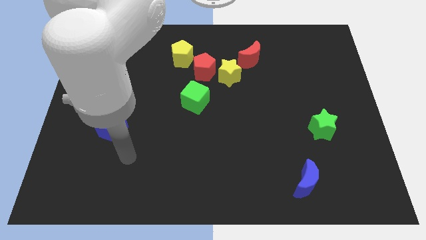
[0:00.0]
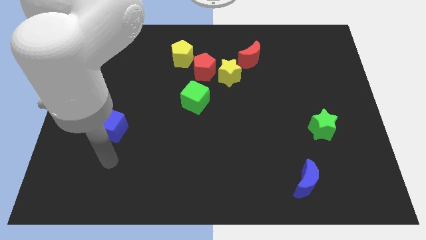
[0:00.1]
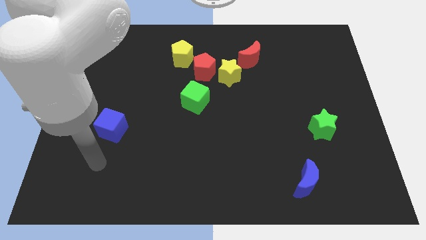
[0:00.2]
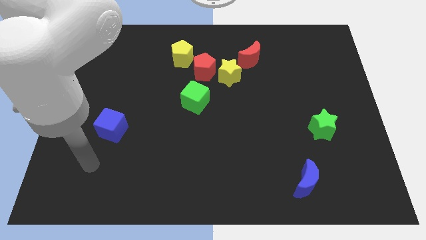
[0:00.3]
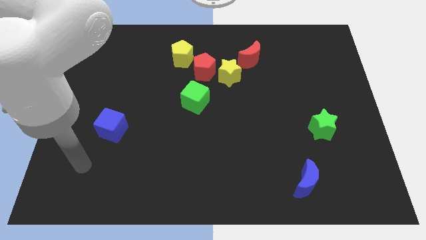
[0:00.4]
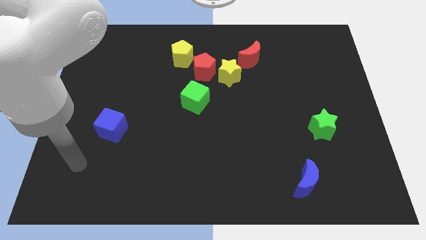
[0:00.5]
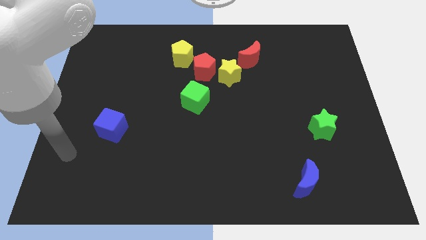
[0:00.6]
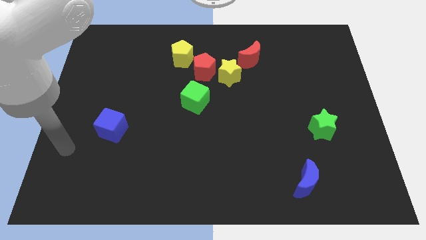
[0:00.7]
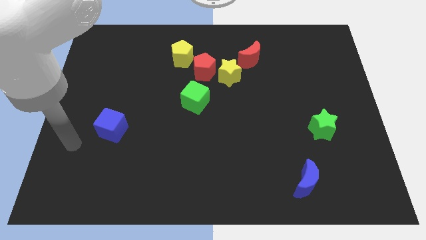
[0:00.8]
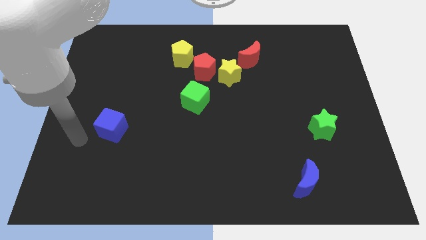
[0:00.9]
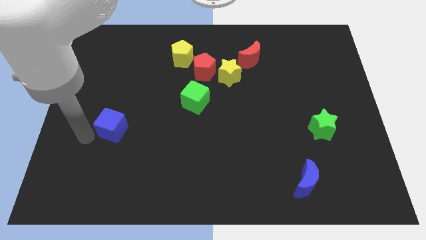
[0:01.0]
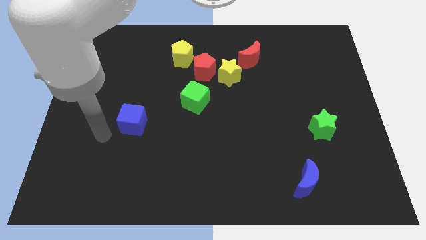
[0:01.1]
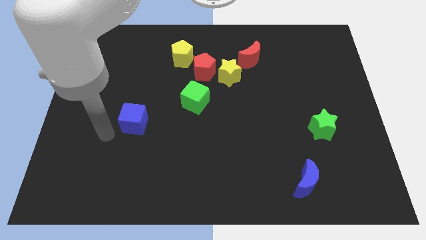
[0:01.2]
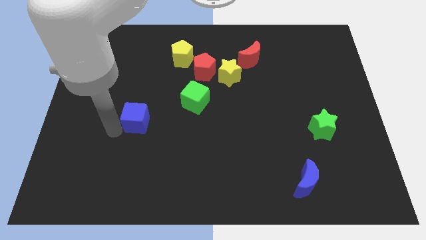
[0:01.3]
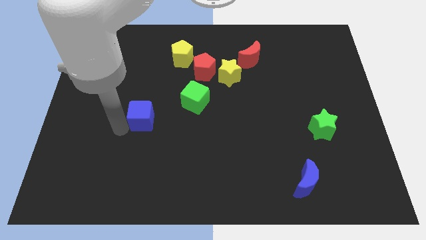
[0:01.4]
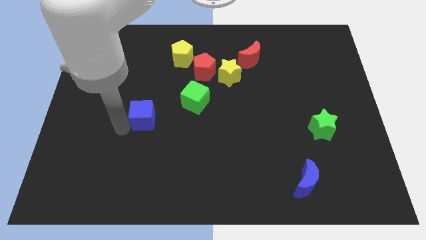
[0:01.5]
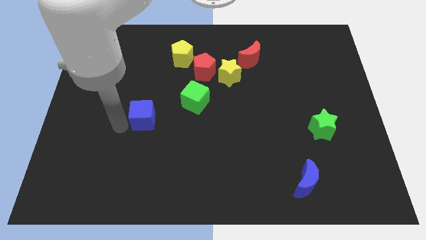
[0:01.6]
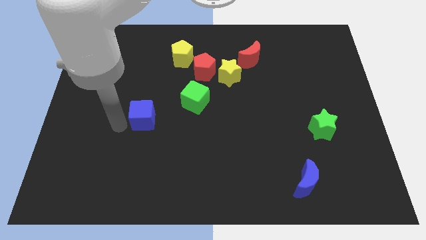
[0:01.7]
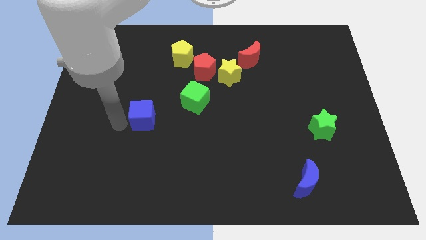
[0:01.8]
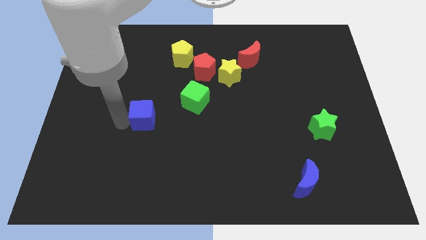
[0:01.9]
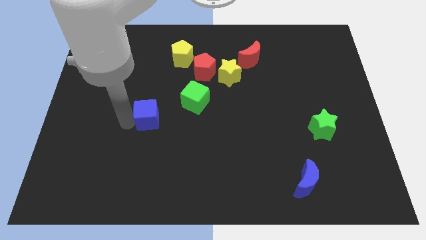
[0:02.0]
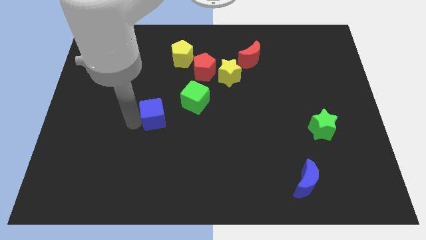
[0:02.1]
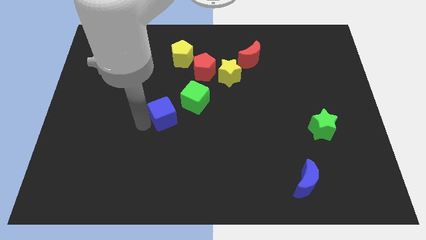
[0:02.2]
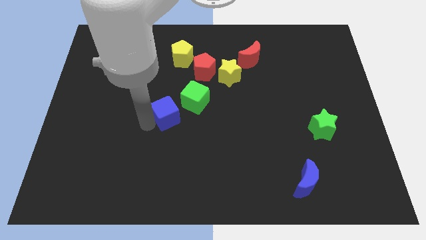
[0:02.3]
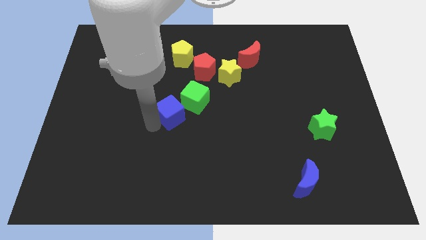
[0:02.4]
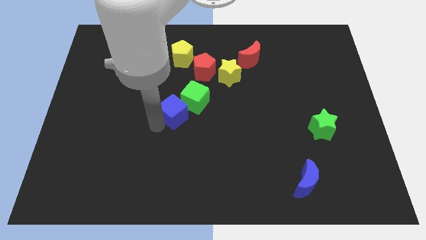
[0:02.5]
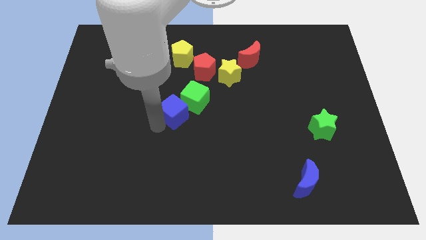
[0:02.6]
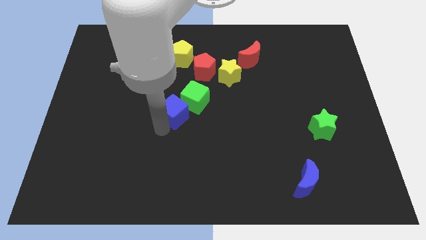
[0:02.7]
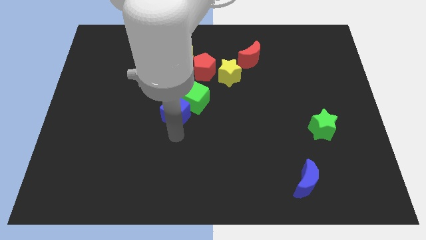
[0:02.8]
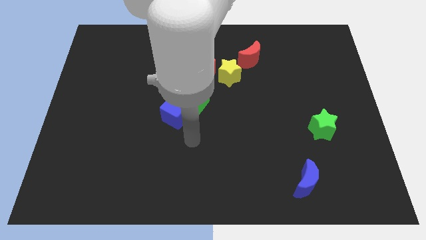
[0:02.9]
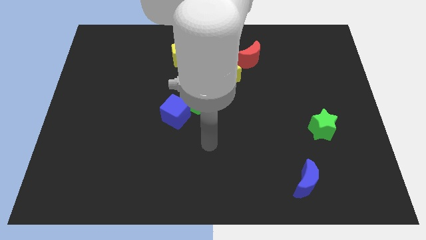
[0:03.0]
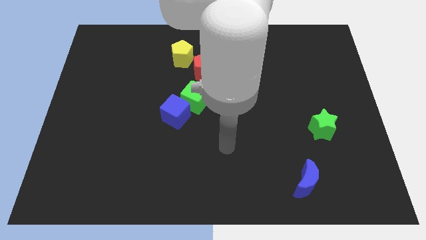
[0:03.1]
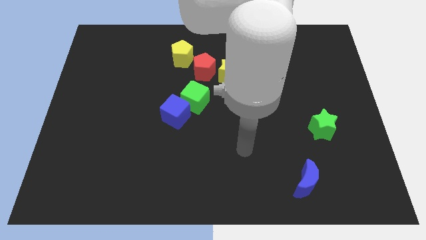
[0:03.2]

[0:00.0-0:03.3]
push blue cube towards green cube

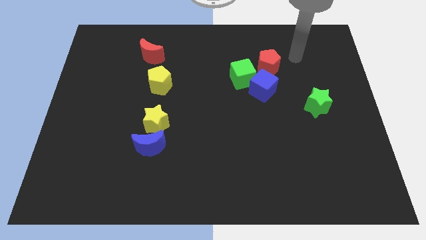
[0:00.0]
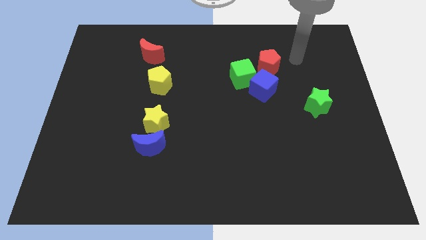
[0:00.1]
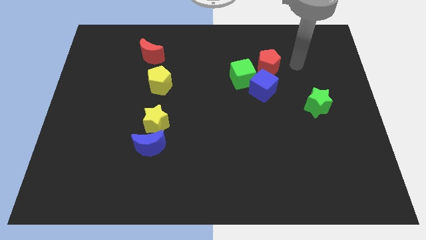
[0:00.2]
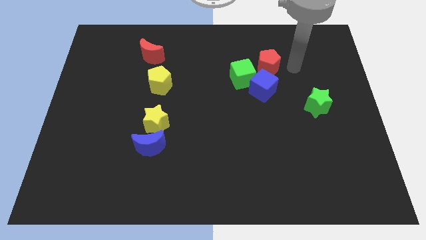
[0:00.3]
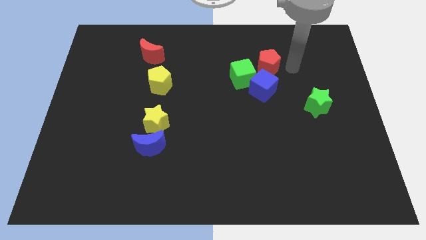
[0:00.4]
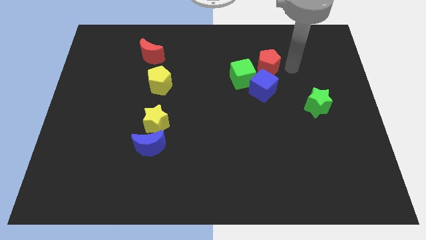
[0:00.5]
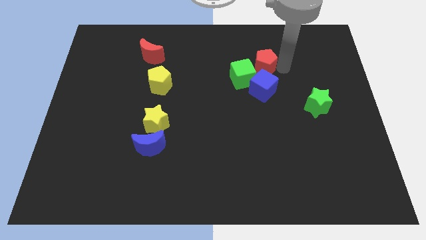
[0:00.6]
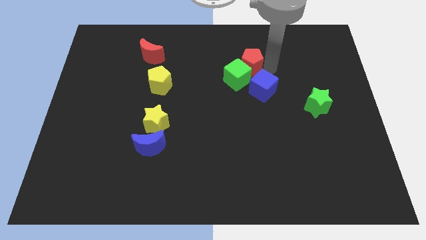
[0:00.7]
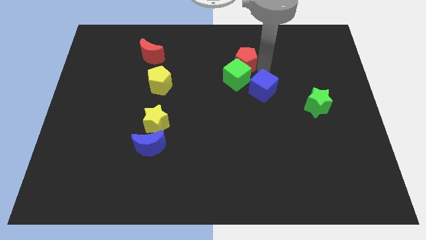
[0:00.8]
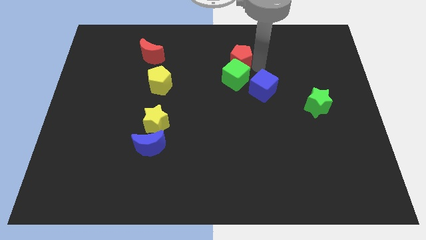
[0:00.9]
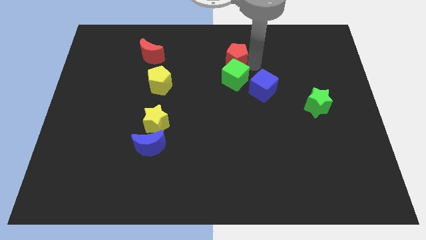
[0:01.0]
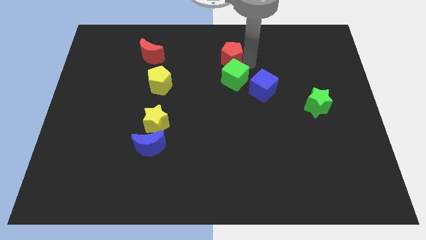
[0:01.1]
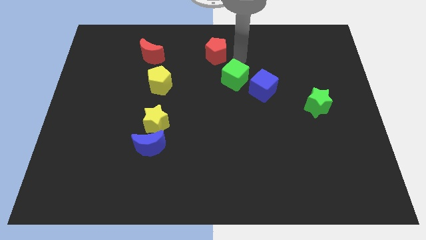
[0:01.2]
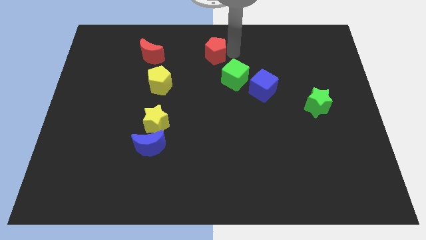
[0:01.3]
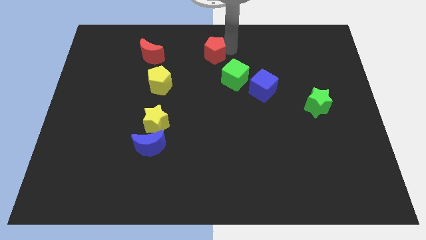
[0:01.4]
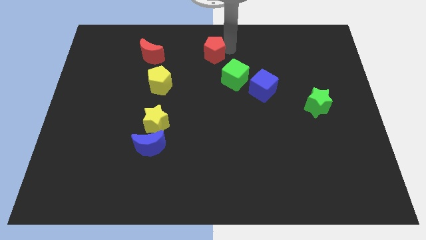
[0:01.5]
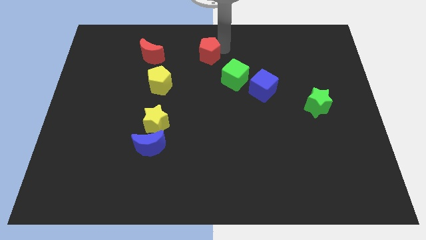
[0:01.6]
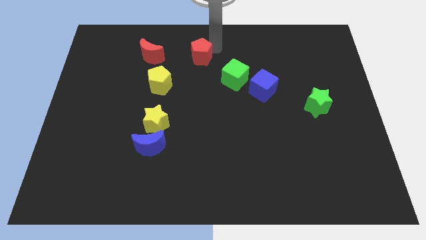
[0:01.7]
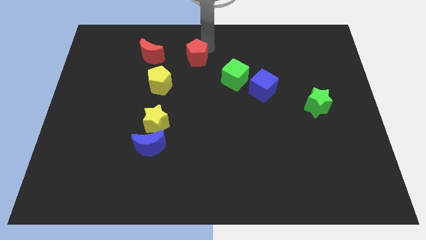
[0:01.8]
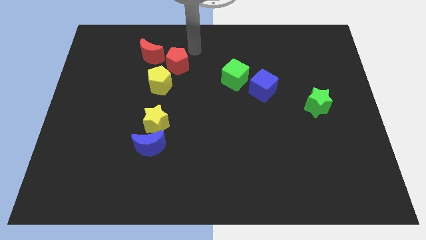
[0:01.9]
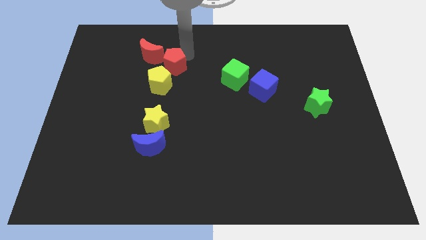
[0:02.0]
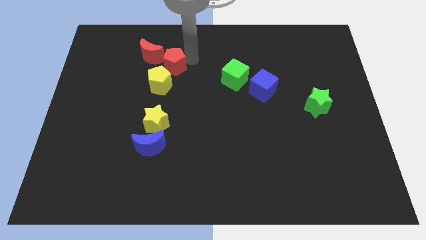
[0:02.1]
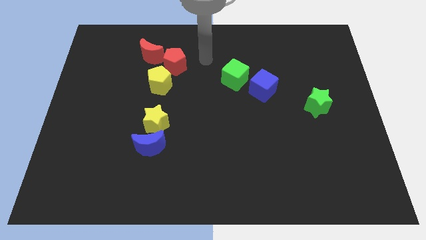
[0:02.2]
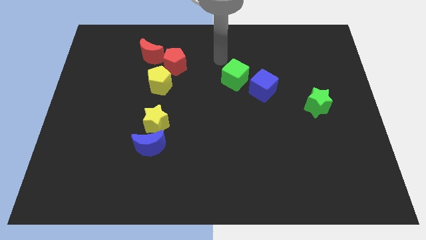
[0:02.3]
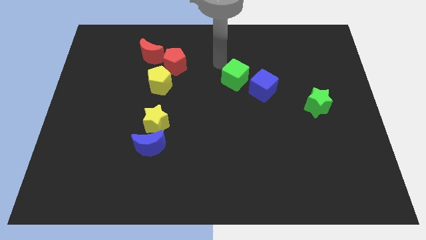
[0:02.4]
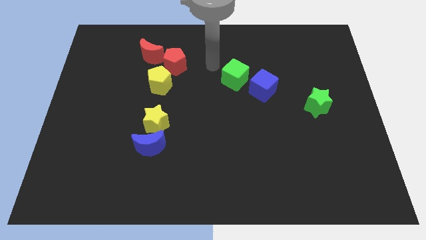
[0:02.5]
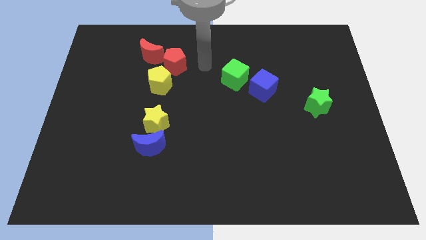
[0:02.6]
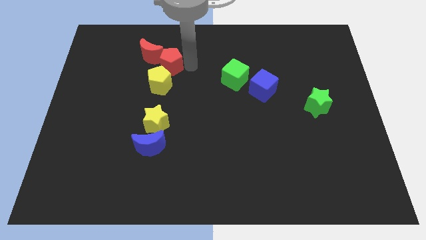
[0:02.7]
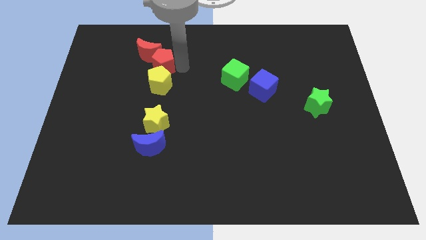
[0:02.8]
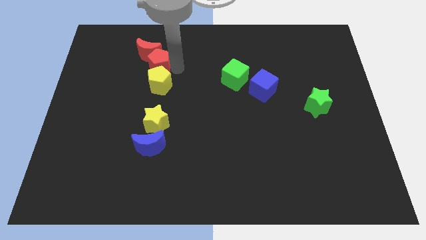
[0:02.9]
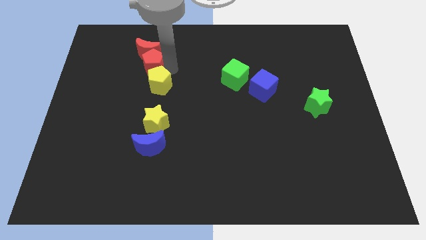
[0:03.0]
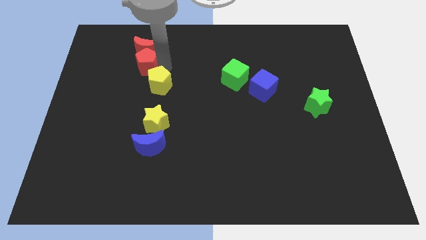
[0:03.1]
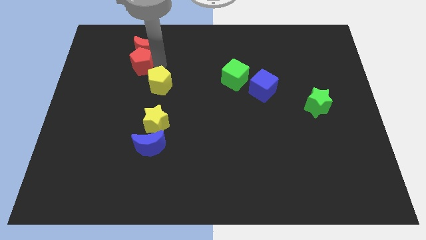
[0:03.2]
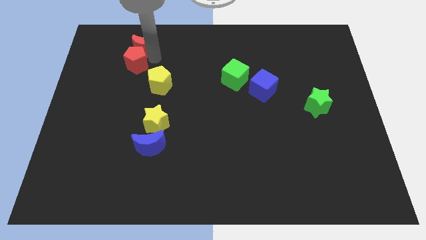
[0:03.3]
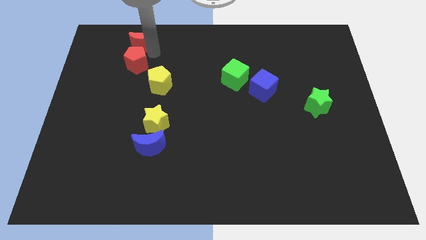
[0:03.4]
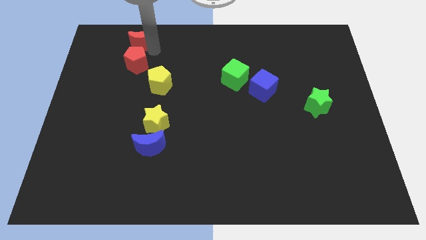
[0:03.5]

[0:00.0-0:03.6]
move red pentagon towards top left

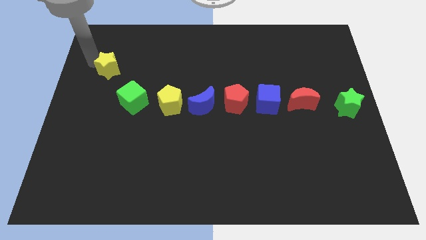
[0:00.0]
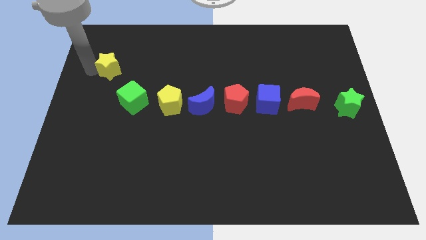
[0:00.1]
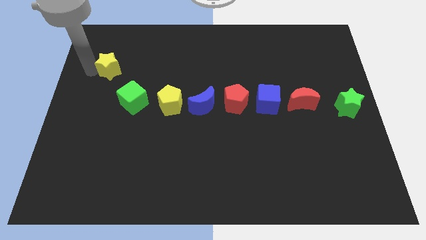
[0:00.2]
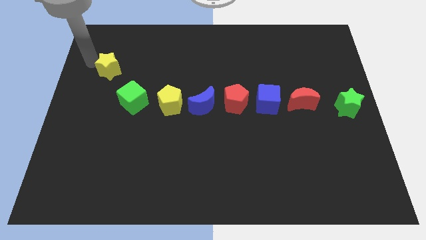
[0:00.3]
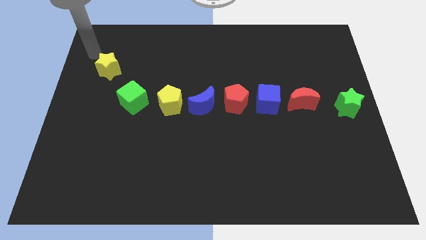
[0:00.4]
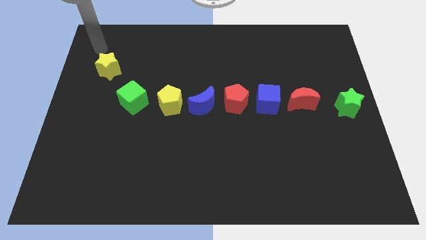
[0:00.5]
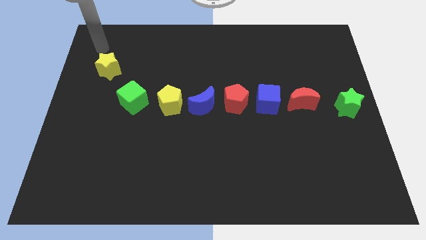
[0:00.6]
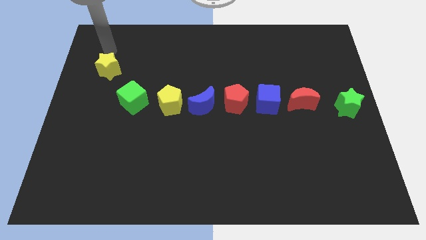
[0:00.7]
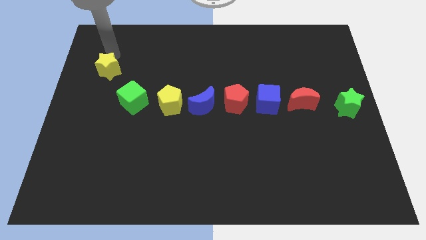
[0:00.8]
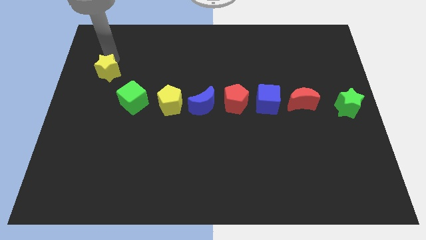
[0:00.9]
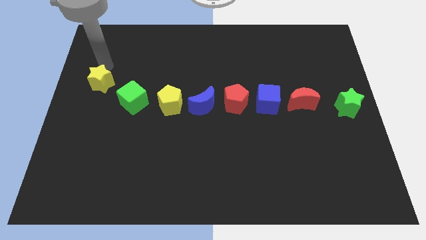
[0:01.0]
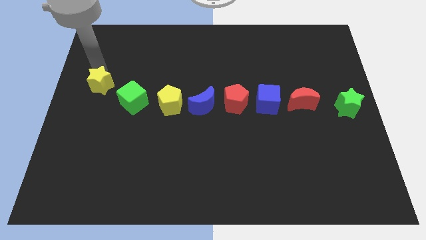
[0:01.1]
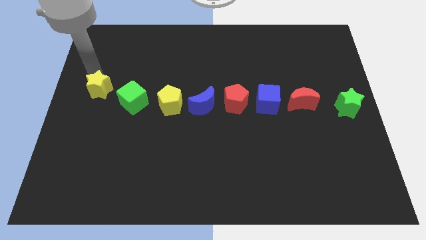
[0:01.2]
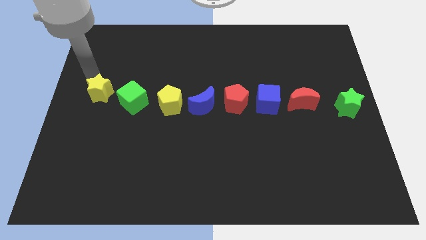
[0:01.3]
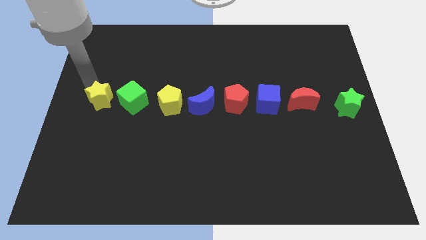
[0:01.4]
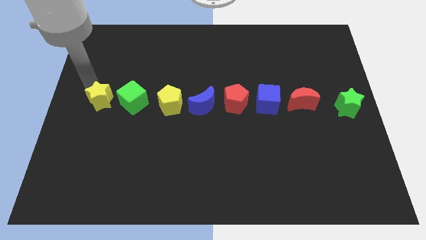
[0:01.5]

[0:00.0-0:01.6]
push the yellow star left to the green cube

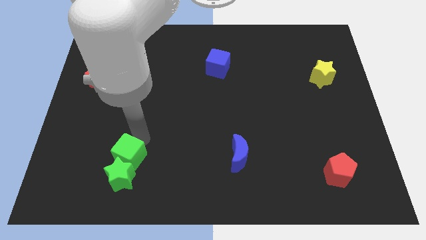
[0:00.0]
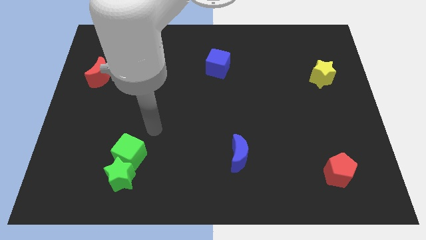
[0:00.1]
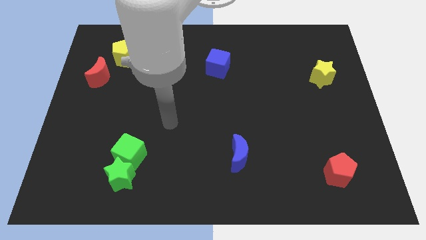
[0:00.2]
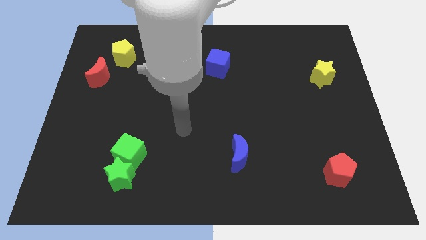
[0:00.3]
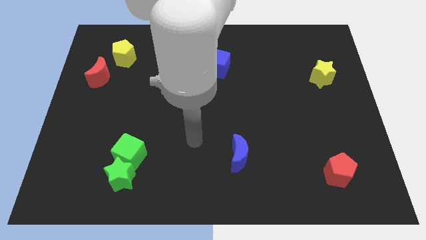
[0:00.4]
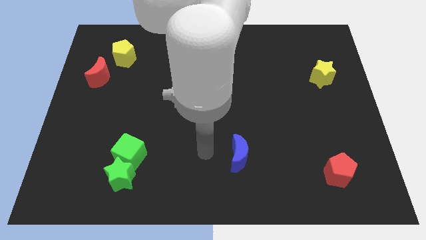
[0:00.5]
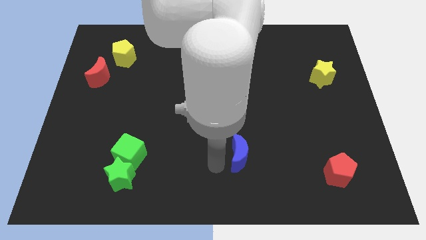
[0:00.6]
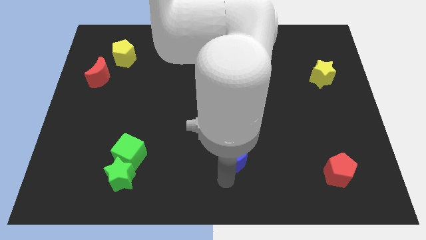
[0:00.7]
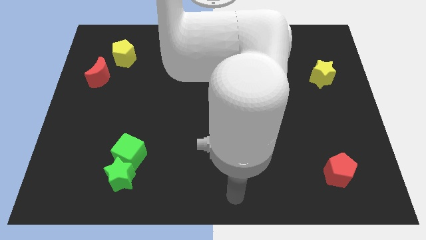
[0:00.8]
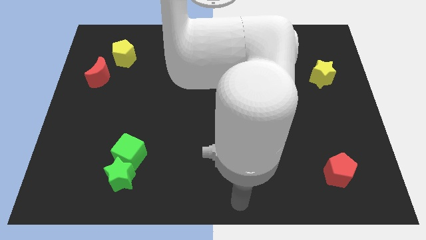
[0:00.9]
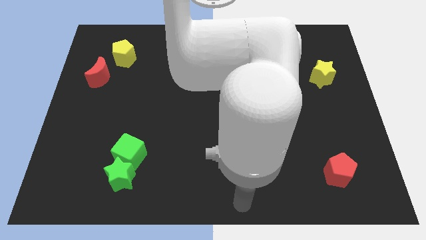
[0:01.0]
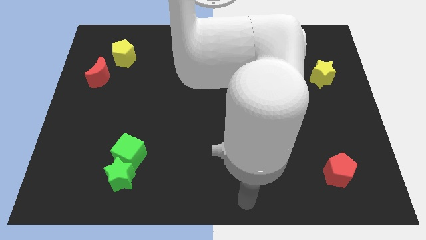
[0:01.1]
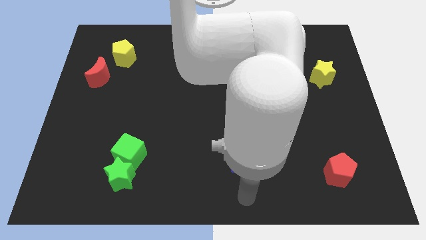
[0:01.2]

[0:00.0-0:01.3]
move your arm towards the bottom side of the board
